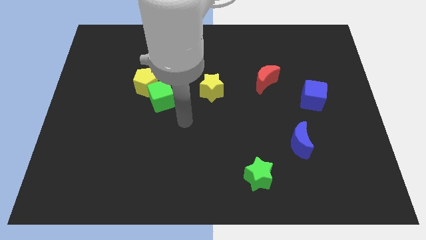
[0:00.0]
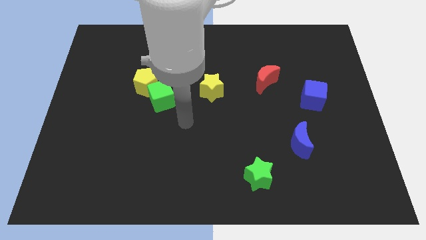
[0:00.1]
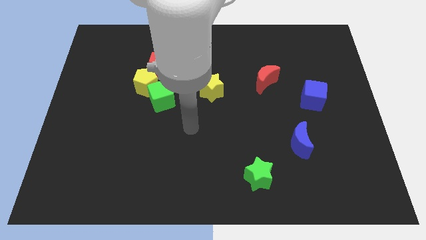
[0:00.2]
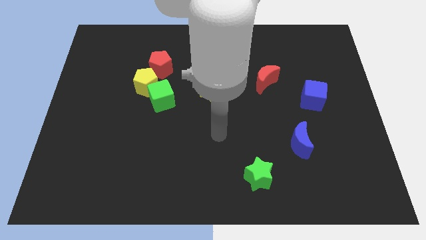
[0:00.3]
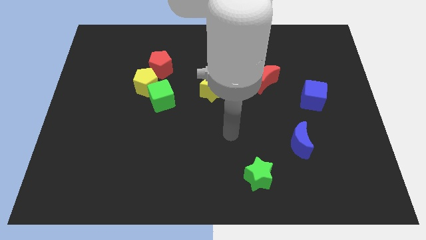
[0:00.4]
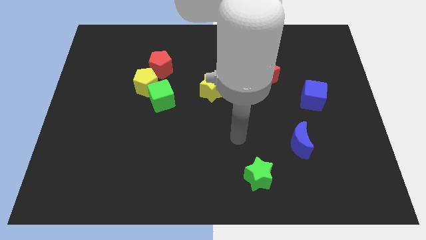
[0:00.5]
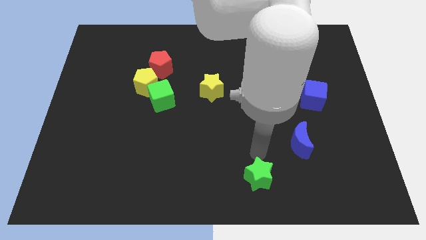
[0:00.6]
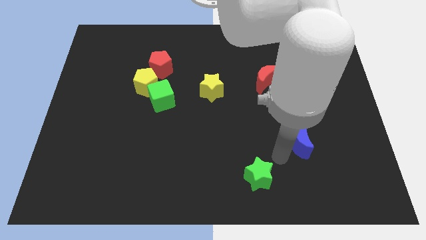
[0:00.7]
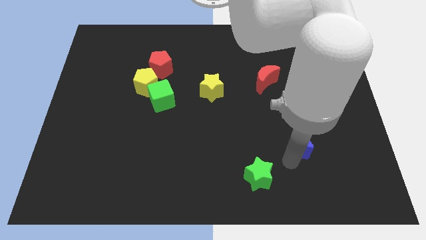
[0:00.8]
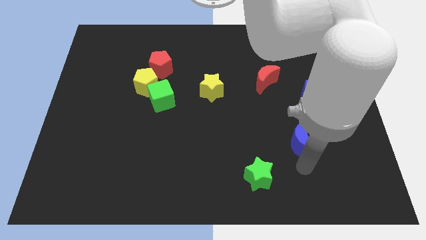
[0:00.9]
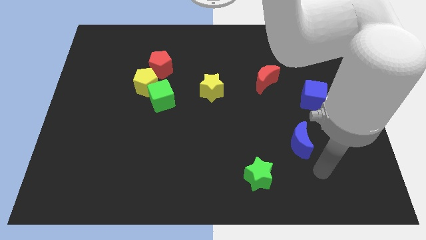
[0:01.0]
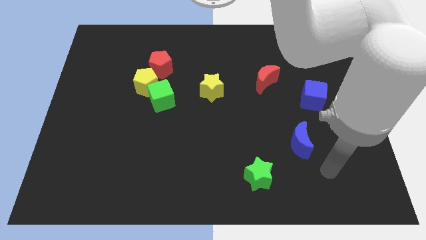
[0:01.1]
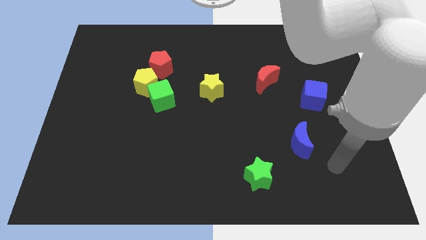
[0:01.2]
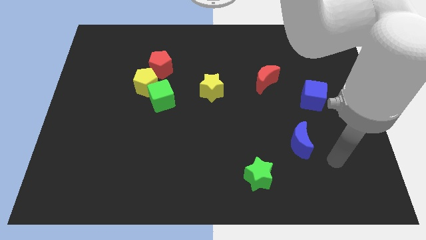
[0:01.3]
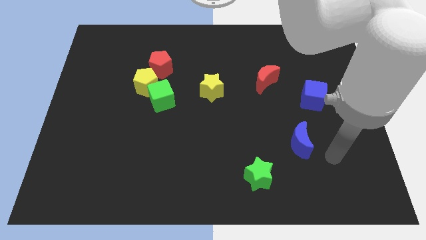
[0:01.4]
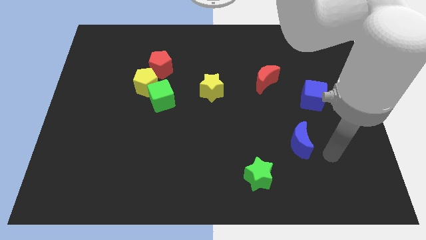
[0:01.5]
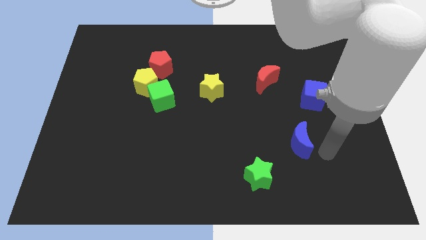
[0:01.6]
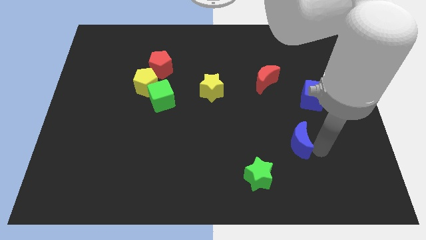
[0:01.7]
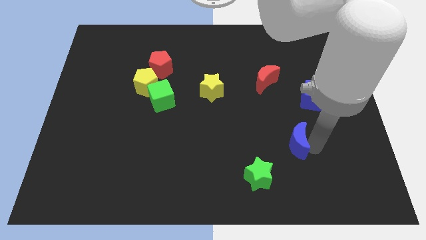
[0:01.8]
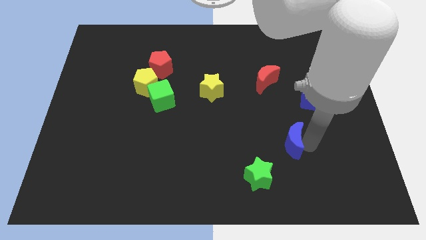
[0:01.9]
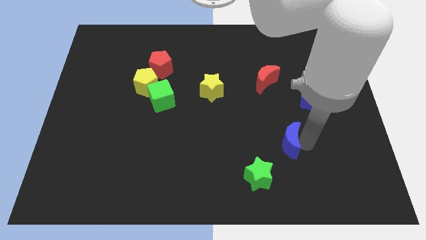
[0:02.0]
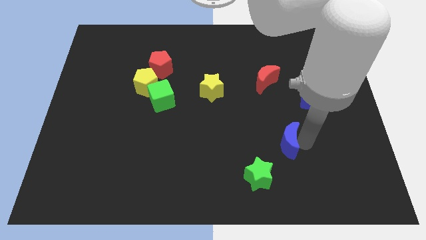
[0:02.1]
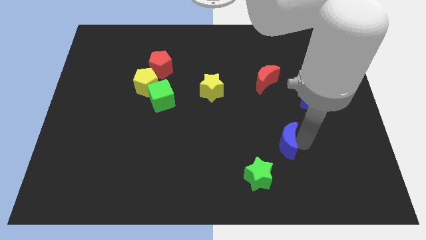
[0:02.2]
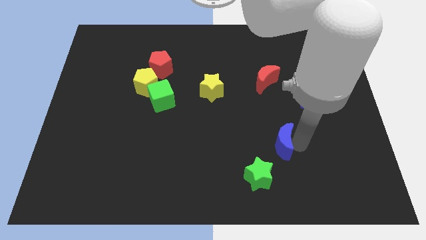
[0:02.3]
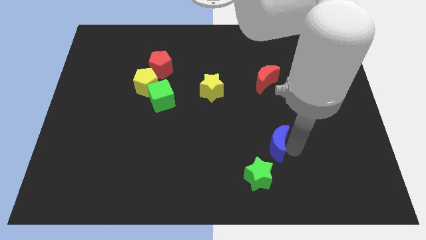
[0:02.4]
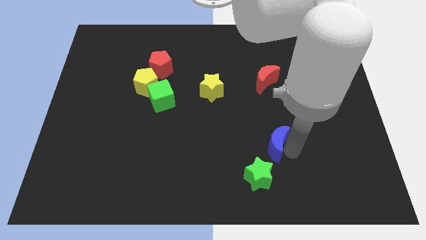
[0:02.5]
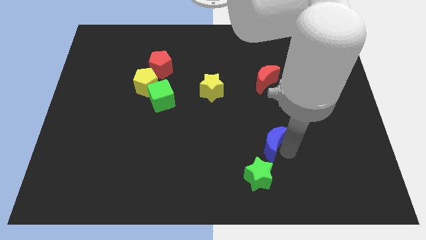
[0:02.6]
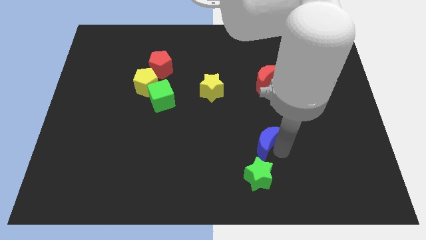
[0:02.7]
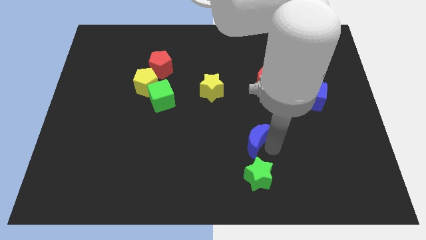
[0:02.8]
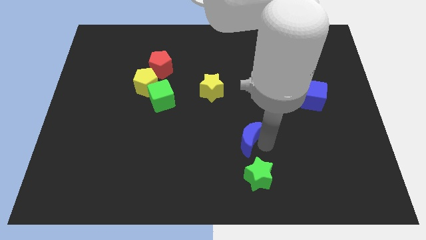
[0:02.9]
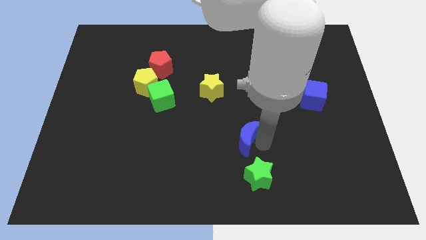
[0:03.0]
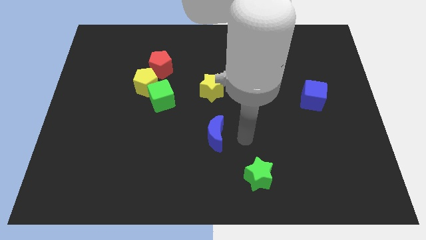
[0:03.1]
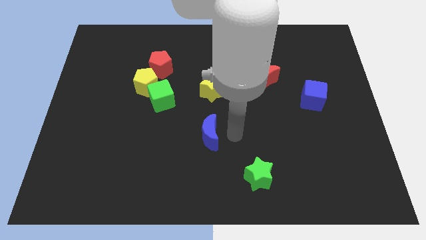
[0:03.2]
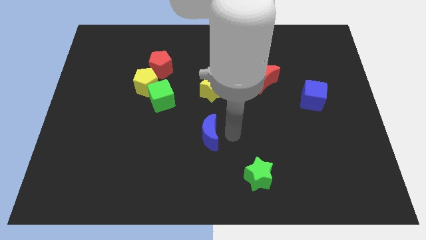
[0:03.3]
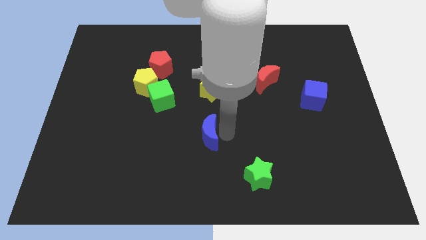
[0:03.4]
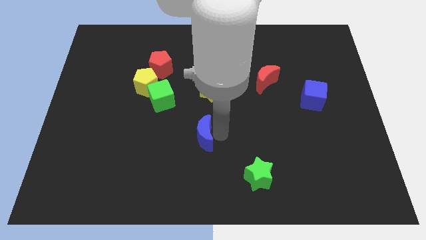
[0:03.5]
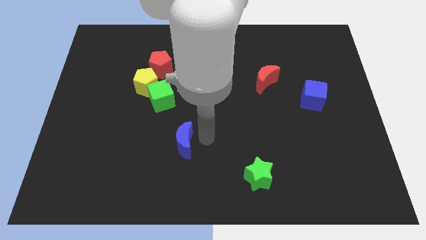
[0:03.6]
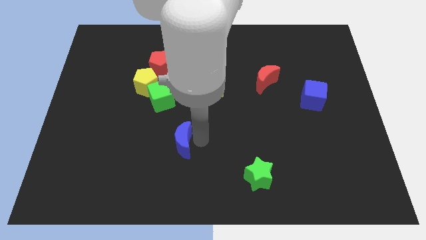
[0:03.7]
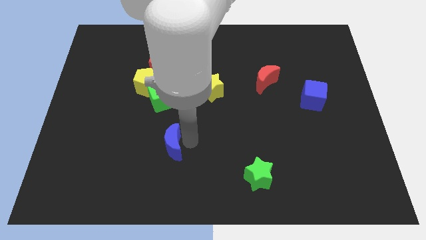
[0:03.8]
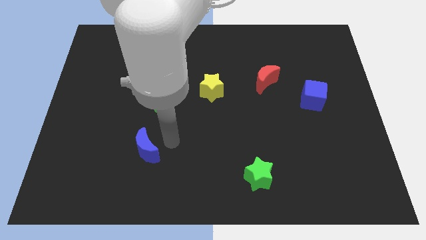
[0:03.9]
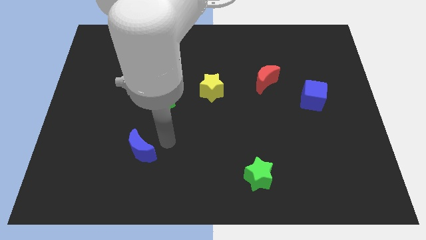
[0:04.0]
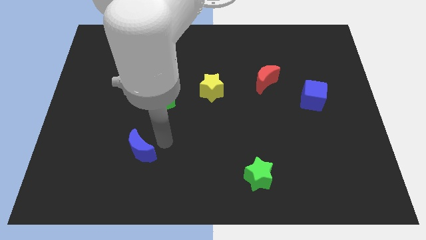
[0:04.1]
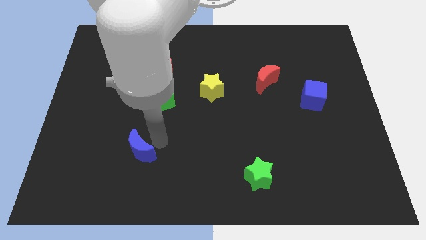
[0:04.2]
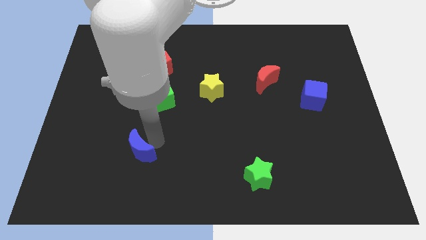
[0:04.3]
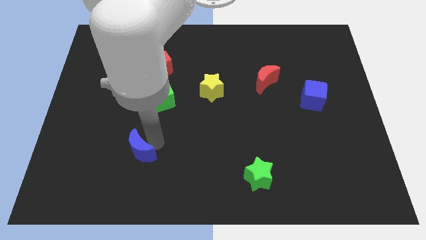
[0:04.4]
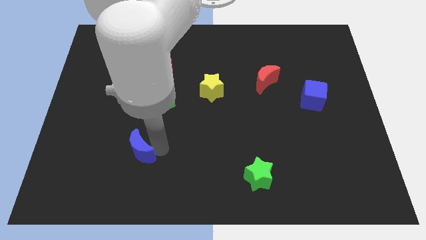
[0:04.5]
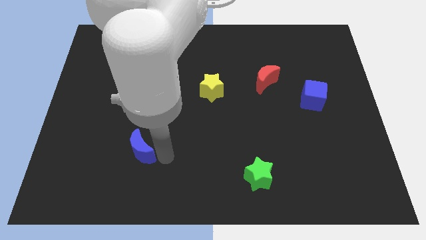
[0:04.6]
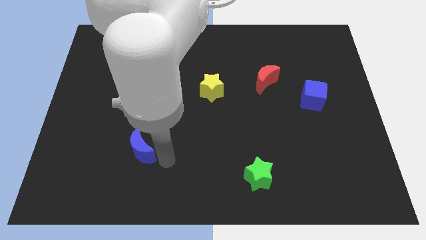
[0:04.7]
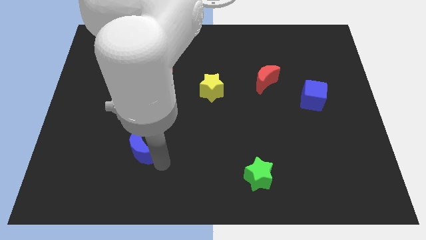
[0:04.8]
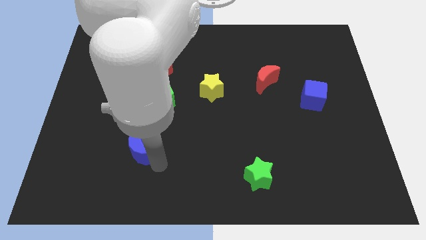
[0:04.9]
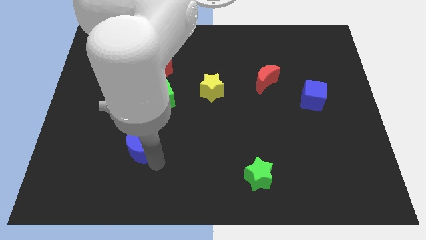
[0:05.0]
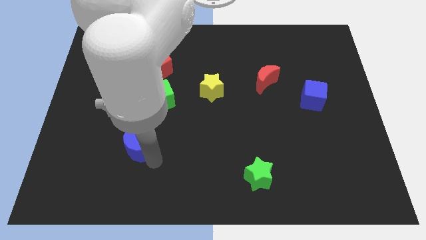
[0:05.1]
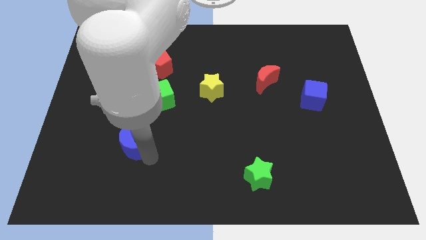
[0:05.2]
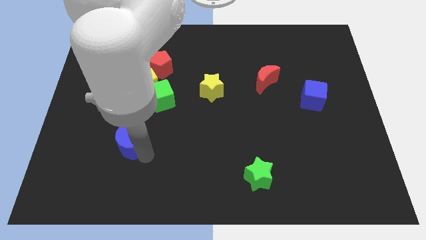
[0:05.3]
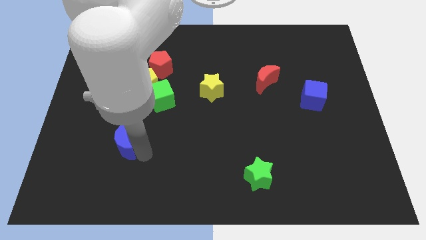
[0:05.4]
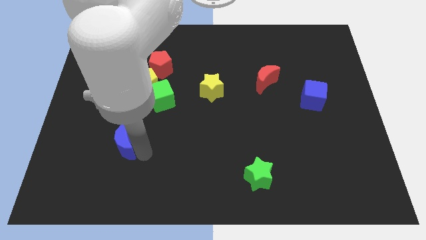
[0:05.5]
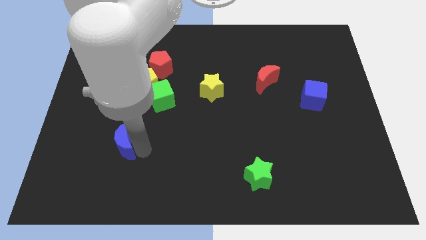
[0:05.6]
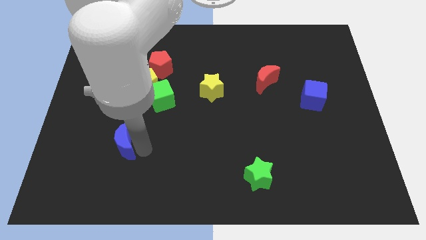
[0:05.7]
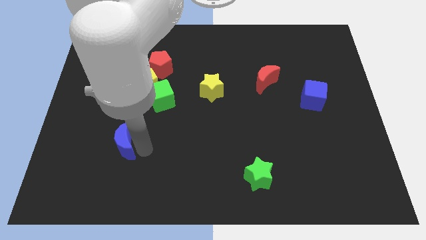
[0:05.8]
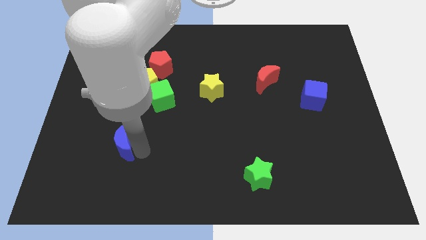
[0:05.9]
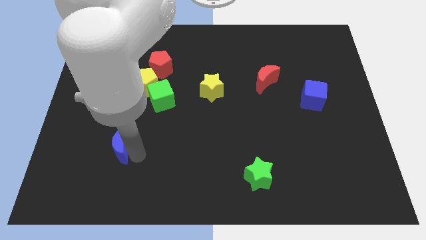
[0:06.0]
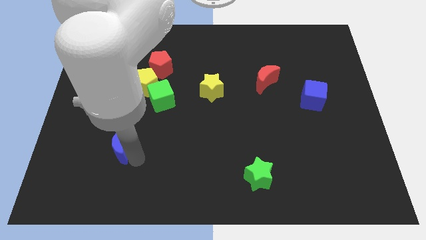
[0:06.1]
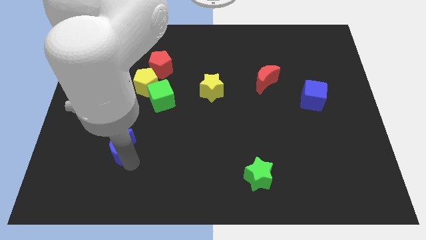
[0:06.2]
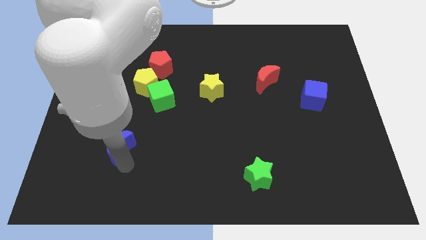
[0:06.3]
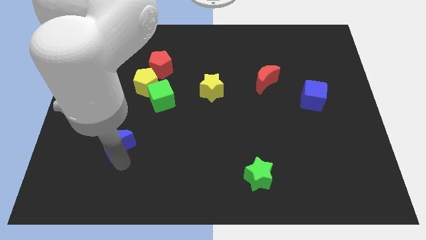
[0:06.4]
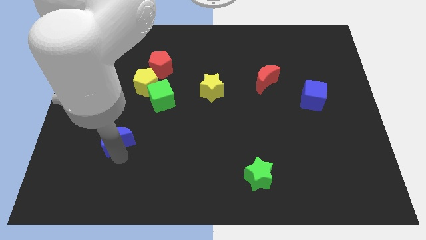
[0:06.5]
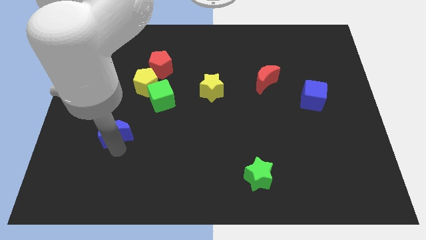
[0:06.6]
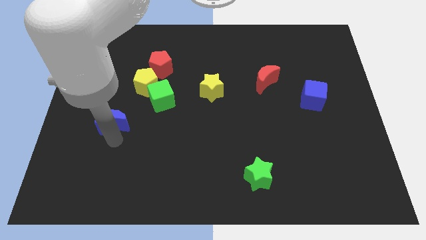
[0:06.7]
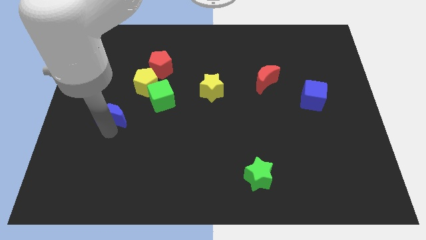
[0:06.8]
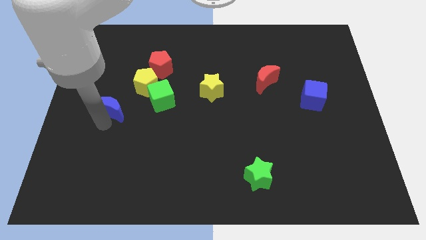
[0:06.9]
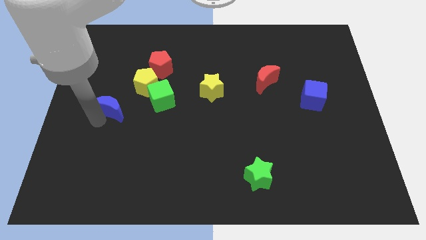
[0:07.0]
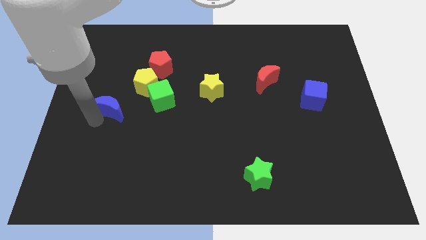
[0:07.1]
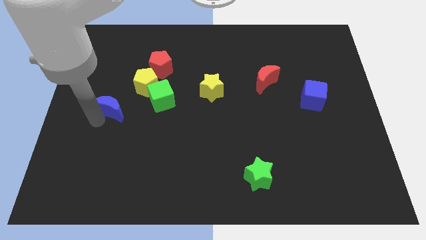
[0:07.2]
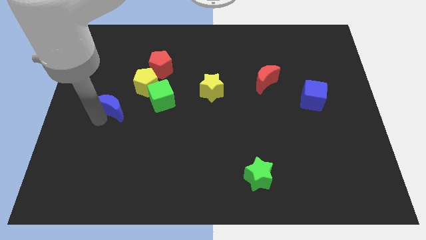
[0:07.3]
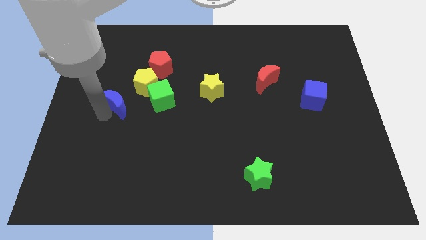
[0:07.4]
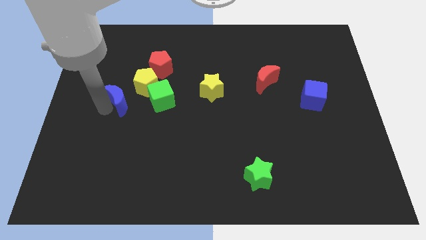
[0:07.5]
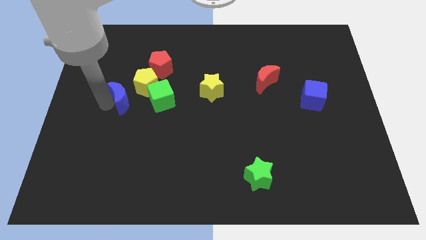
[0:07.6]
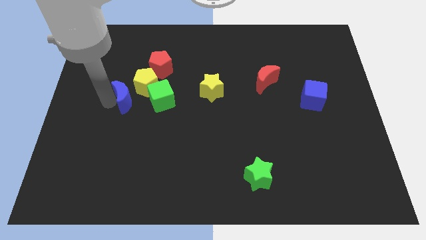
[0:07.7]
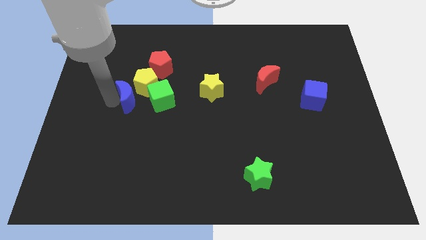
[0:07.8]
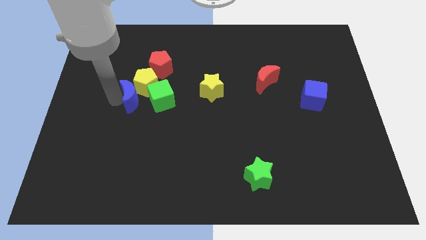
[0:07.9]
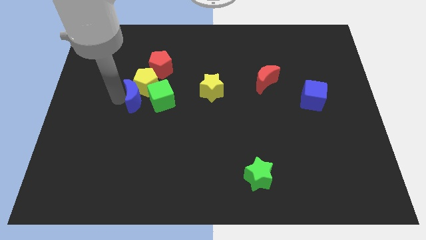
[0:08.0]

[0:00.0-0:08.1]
push the blue moon towards the yellow pentagon
